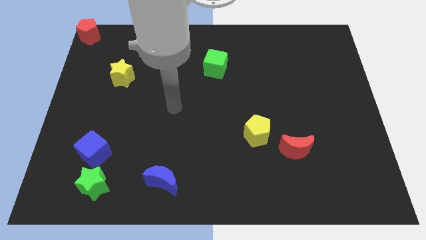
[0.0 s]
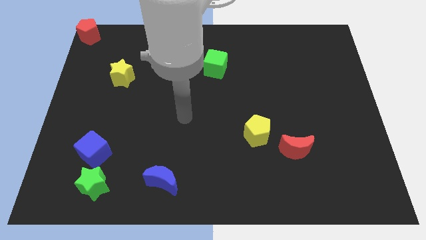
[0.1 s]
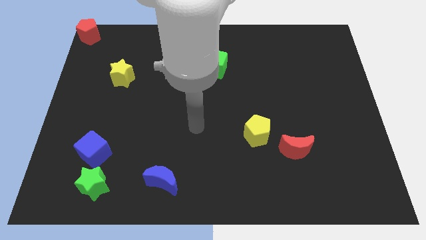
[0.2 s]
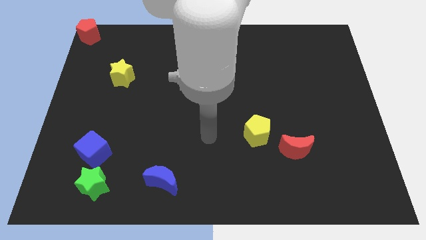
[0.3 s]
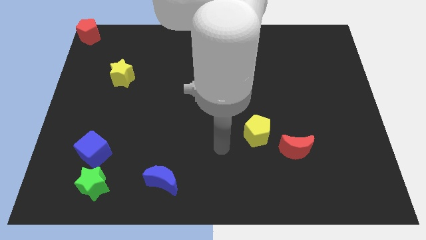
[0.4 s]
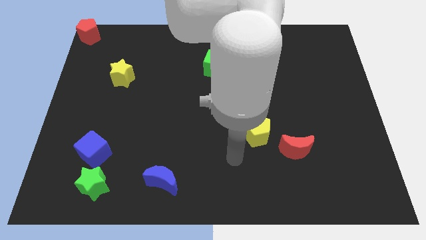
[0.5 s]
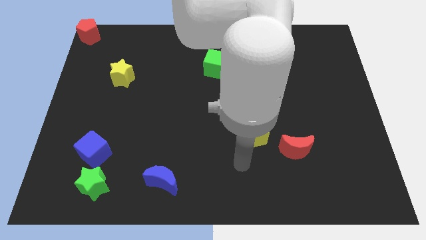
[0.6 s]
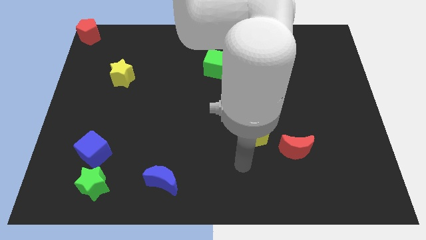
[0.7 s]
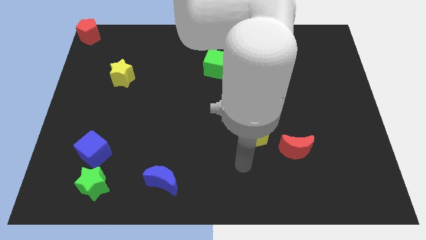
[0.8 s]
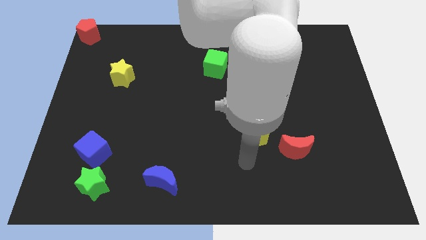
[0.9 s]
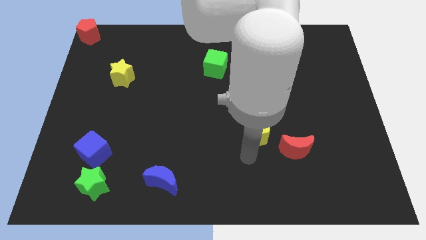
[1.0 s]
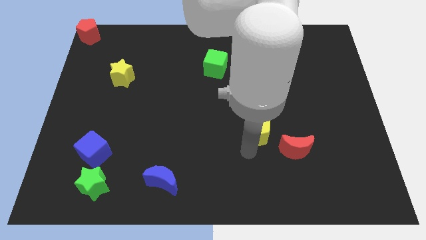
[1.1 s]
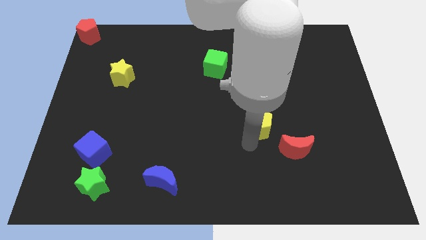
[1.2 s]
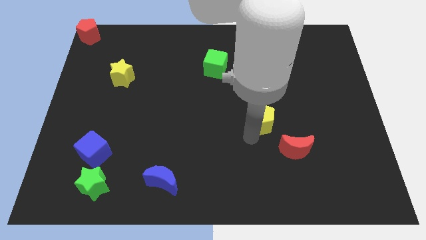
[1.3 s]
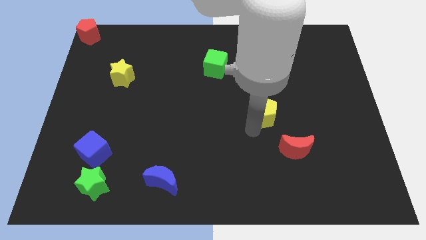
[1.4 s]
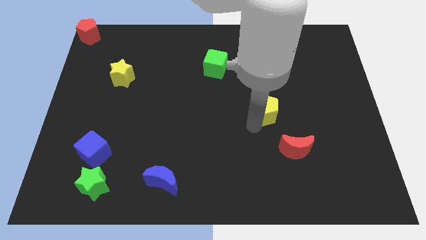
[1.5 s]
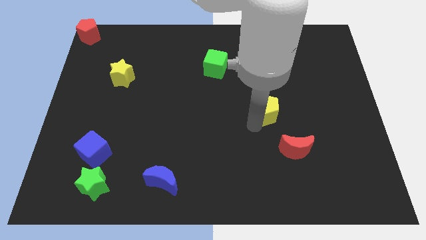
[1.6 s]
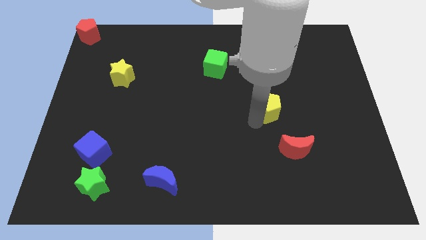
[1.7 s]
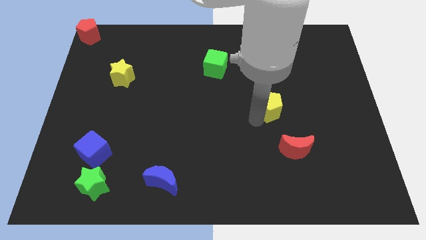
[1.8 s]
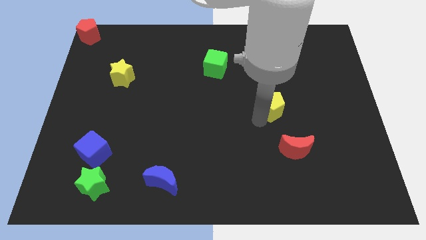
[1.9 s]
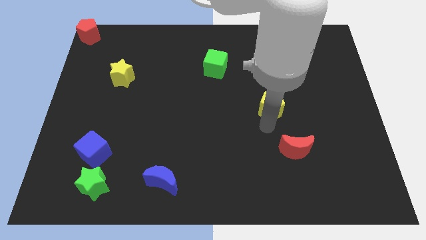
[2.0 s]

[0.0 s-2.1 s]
place the yellow pentagon above the red moon

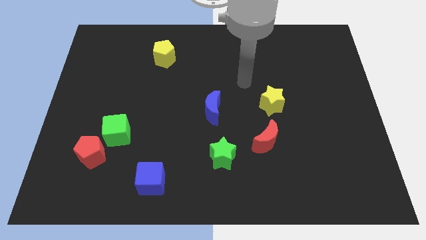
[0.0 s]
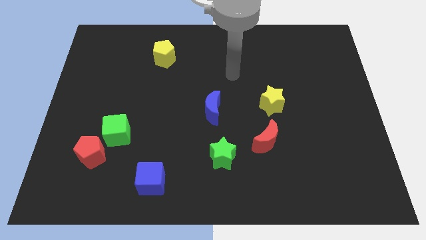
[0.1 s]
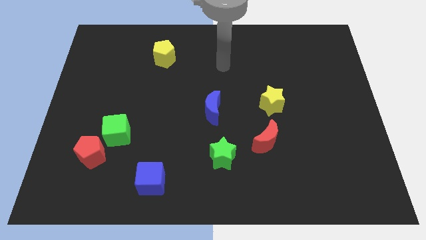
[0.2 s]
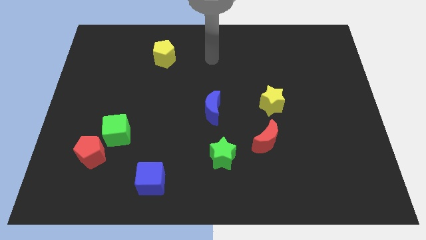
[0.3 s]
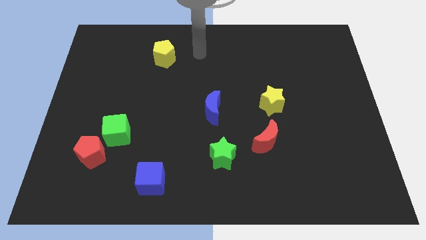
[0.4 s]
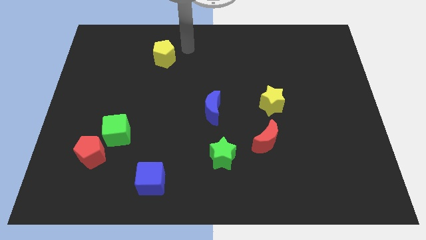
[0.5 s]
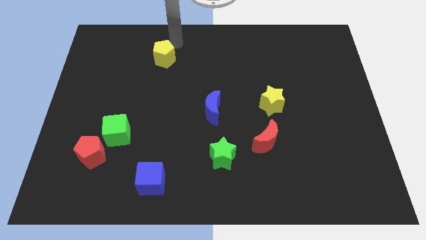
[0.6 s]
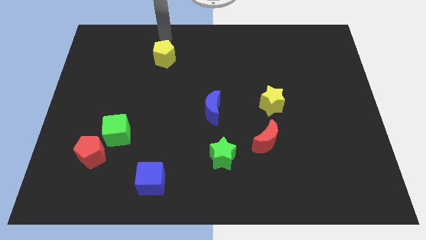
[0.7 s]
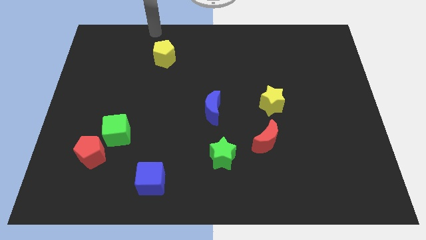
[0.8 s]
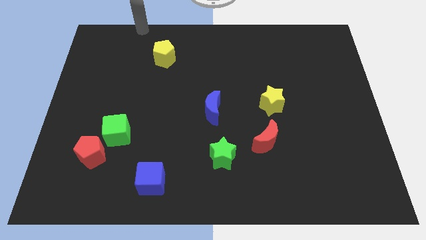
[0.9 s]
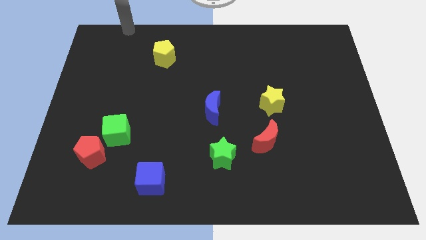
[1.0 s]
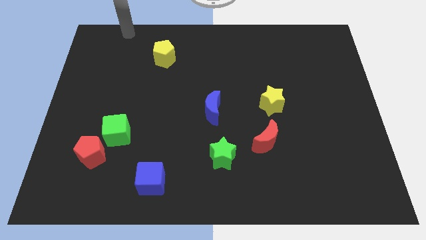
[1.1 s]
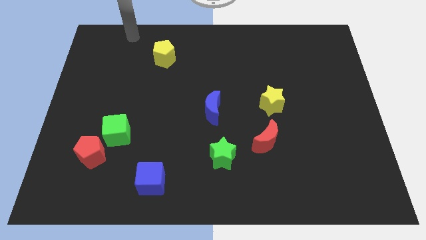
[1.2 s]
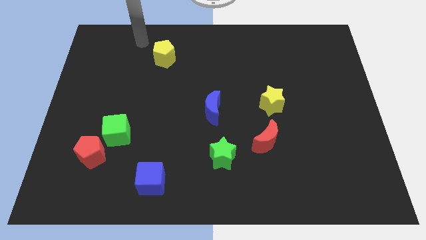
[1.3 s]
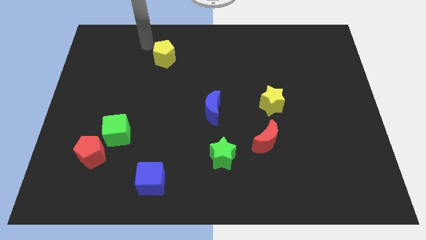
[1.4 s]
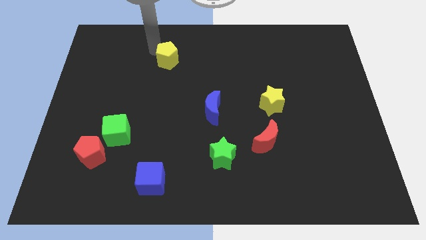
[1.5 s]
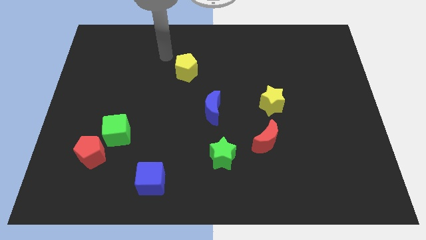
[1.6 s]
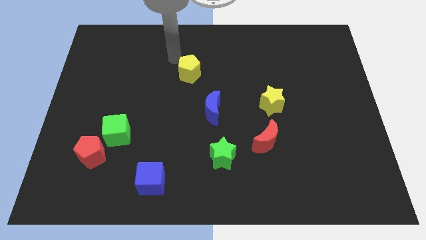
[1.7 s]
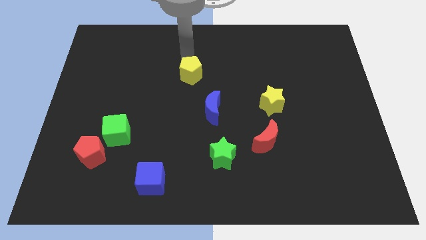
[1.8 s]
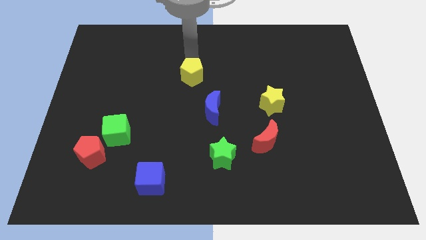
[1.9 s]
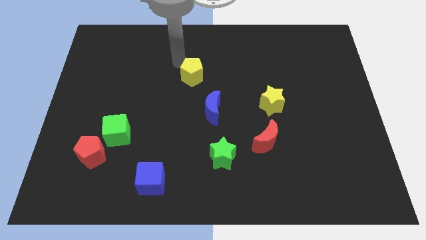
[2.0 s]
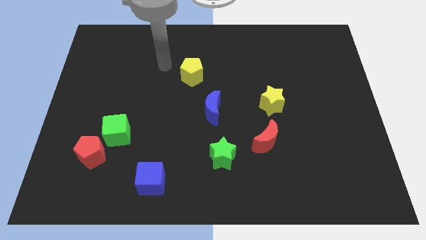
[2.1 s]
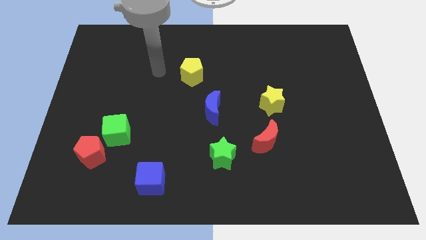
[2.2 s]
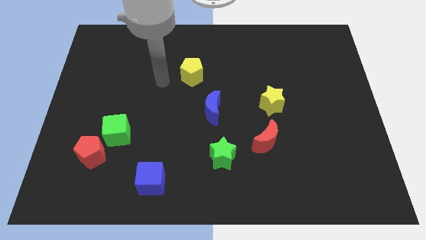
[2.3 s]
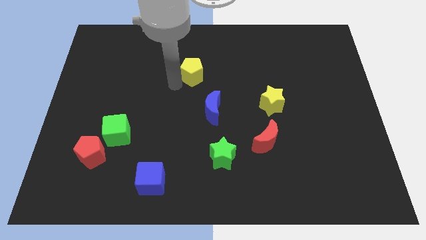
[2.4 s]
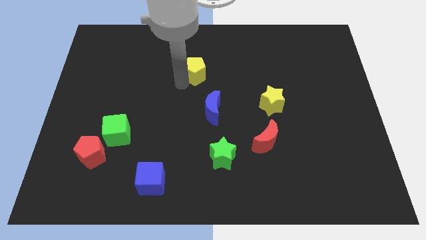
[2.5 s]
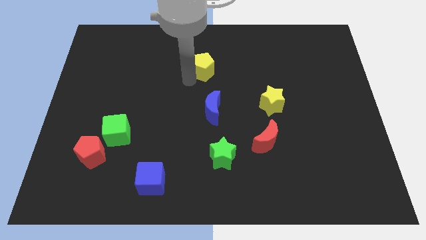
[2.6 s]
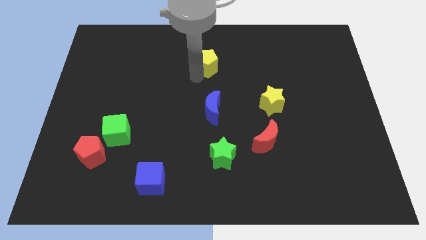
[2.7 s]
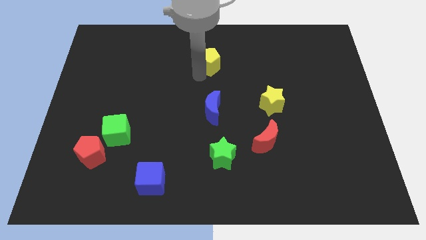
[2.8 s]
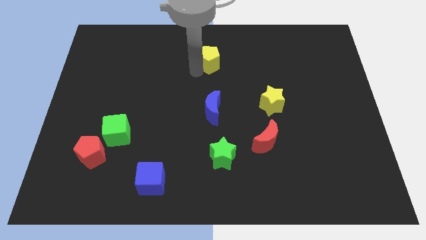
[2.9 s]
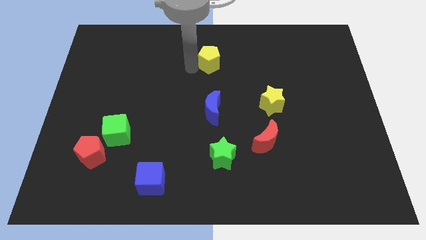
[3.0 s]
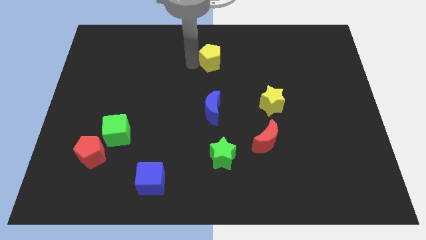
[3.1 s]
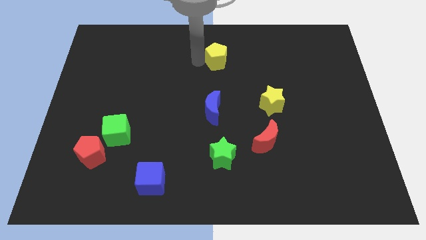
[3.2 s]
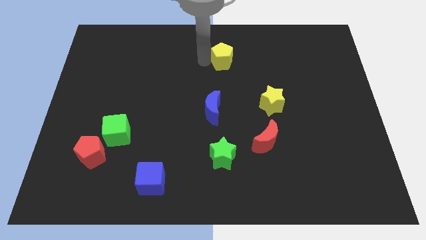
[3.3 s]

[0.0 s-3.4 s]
place the yellow pentagon above the blue moon

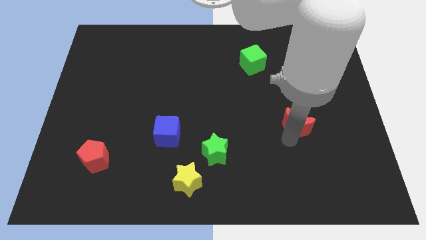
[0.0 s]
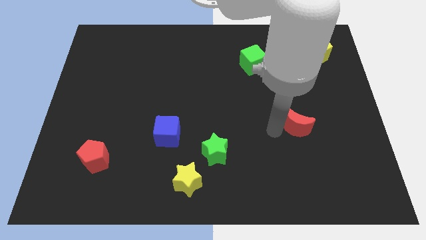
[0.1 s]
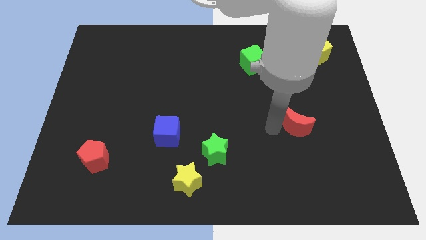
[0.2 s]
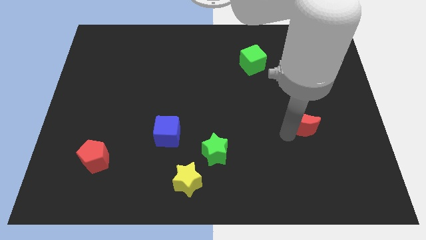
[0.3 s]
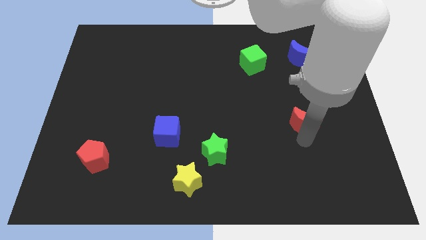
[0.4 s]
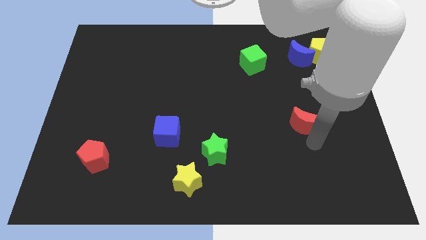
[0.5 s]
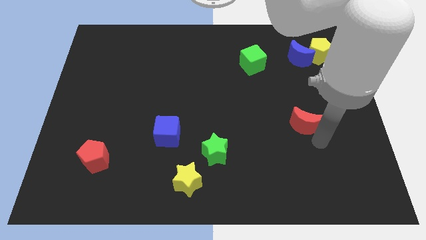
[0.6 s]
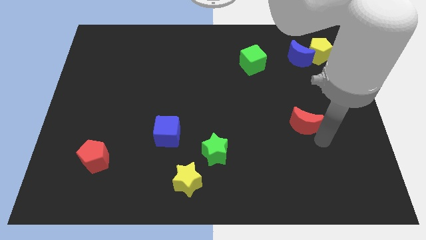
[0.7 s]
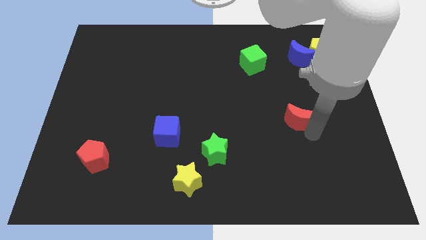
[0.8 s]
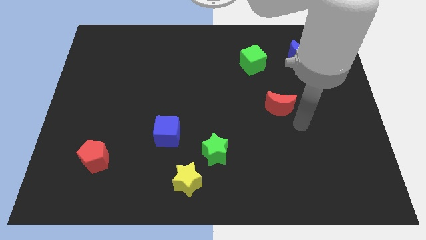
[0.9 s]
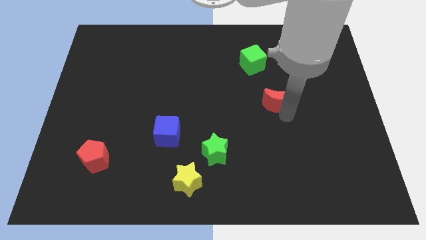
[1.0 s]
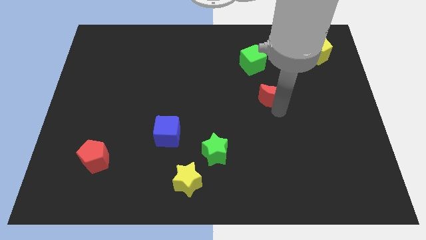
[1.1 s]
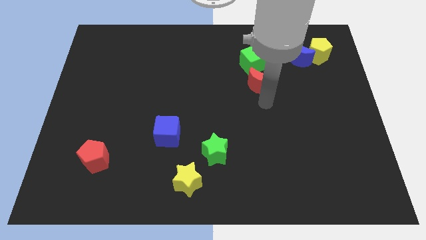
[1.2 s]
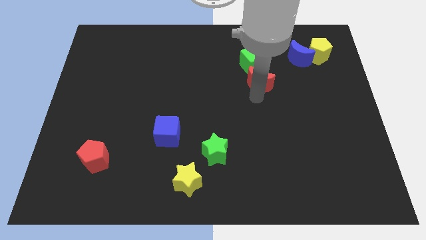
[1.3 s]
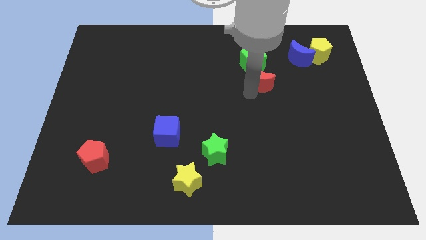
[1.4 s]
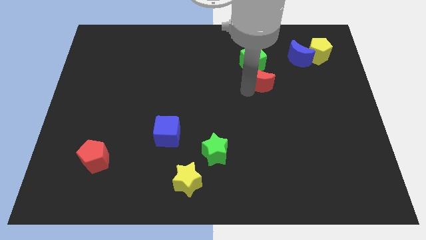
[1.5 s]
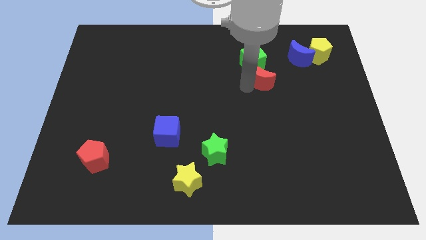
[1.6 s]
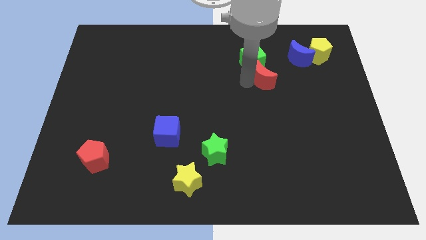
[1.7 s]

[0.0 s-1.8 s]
move the red moon into the green cube

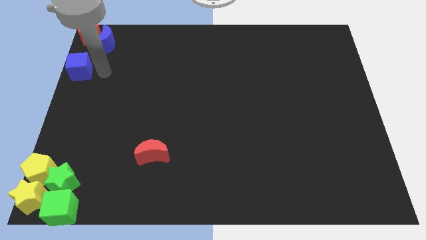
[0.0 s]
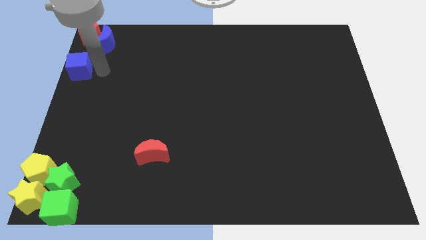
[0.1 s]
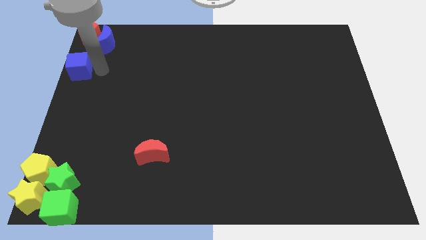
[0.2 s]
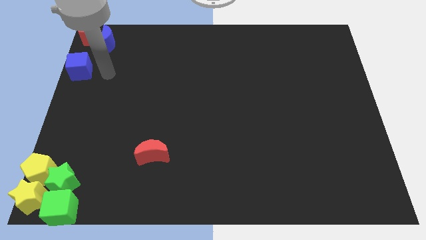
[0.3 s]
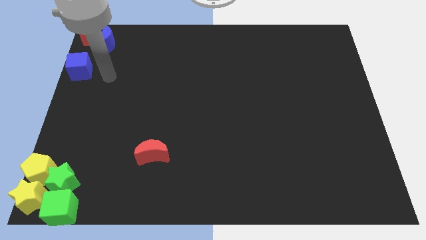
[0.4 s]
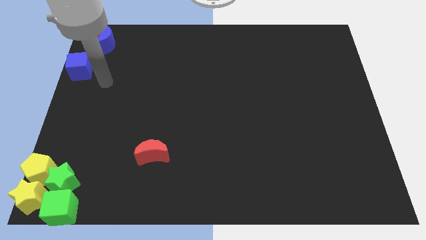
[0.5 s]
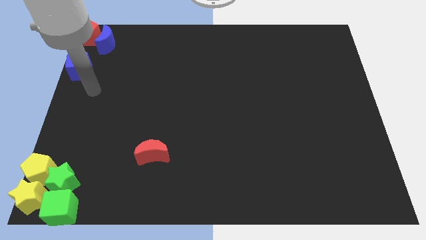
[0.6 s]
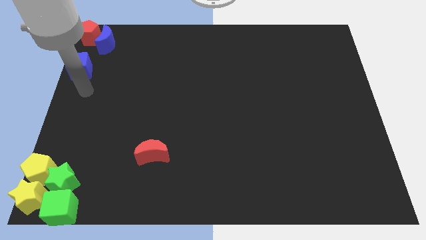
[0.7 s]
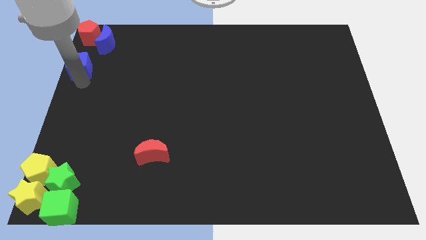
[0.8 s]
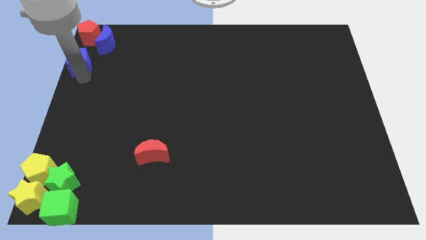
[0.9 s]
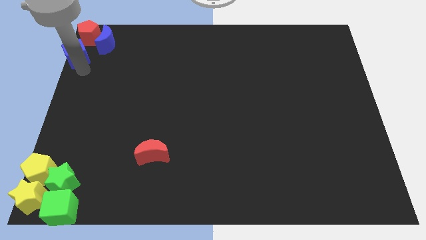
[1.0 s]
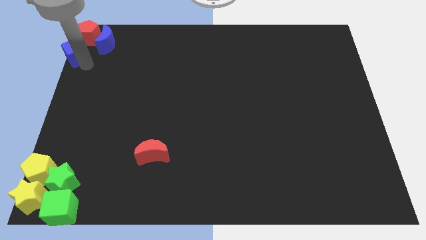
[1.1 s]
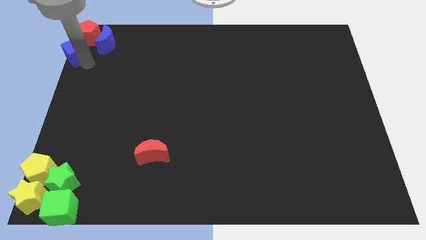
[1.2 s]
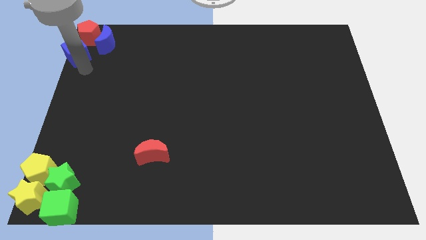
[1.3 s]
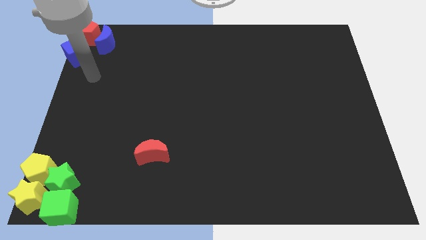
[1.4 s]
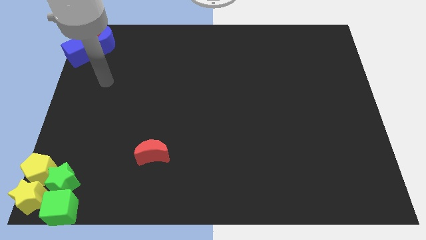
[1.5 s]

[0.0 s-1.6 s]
push the blue cube close to the red pentagon
